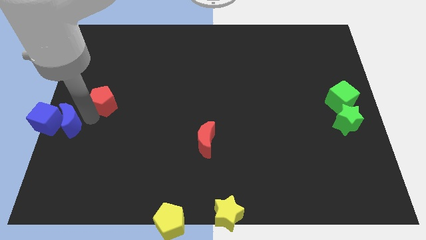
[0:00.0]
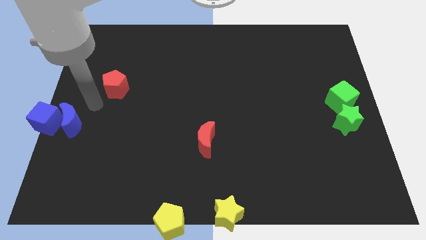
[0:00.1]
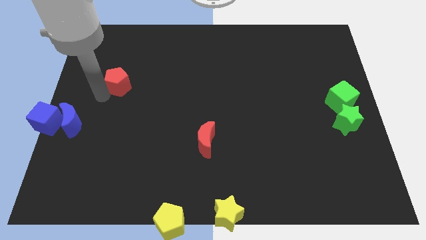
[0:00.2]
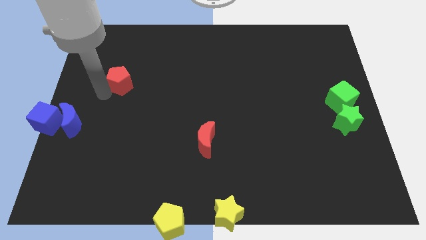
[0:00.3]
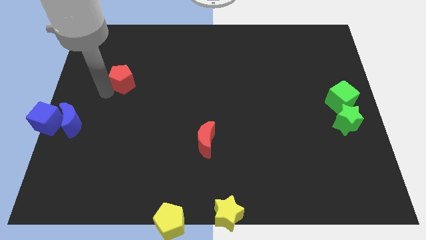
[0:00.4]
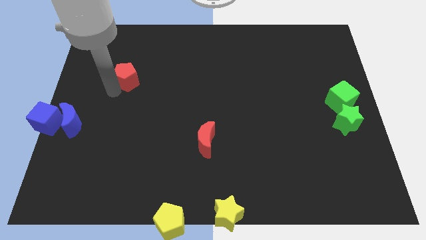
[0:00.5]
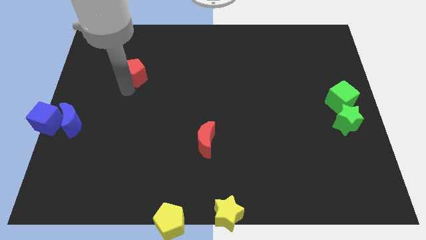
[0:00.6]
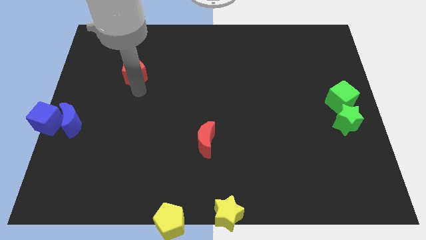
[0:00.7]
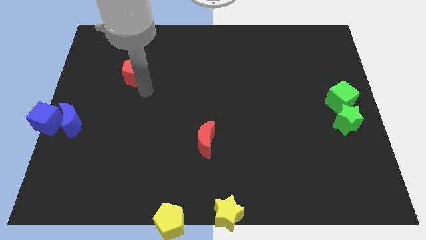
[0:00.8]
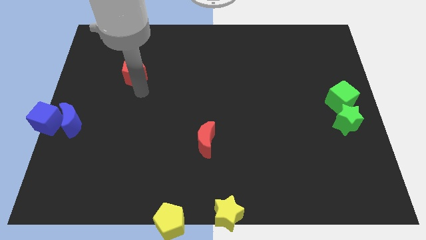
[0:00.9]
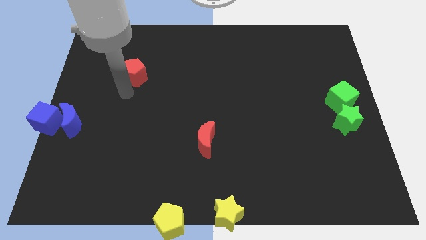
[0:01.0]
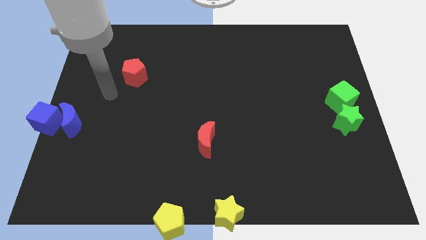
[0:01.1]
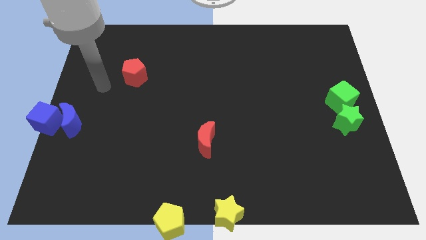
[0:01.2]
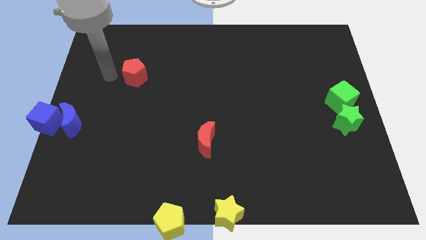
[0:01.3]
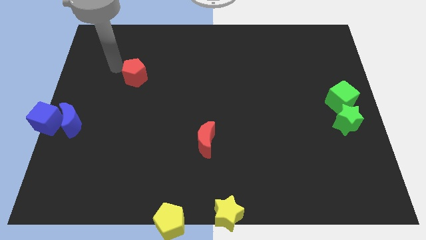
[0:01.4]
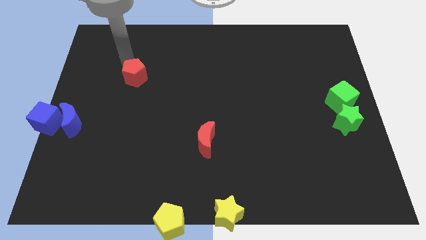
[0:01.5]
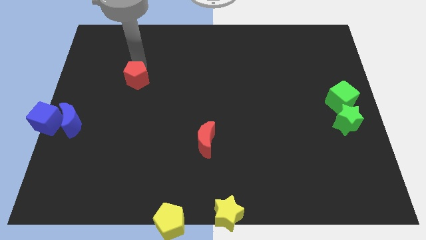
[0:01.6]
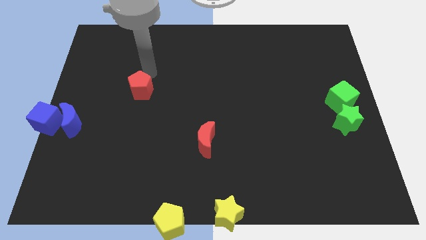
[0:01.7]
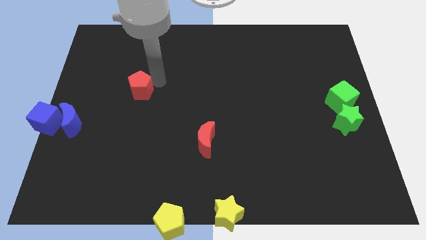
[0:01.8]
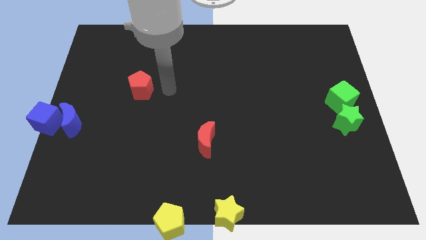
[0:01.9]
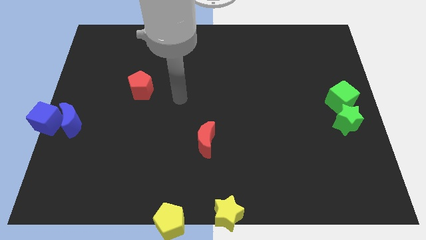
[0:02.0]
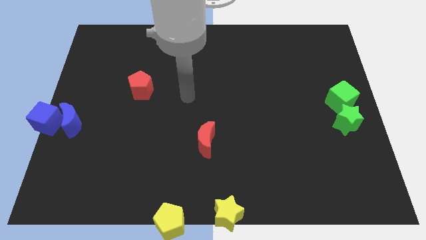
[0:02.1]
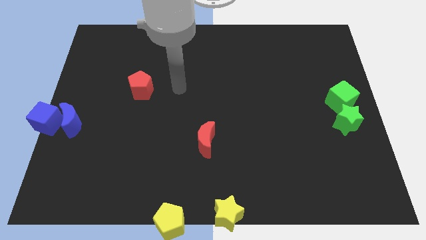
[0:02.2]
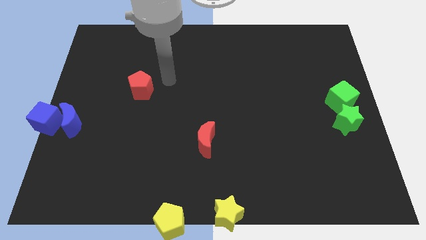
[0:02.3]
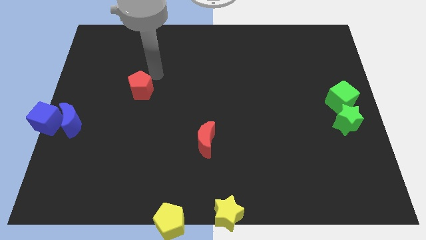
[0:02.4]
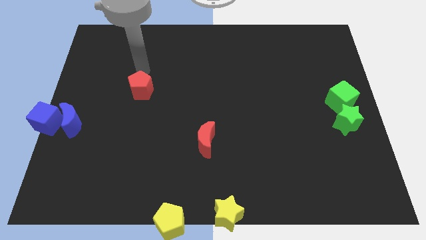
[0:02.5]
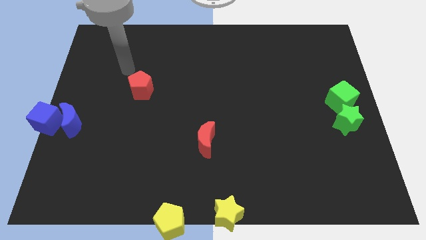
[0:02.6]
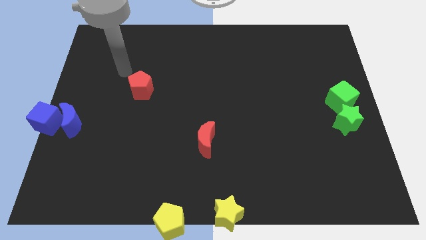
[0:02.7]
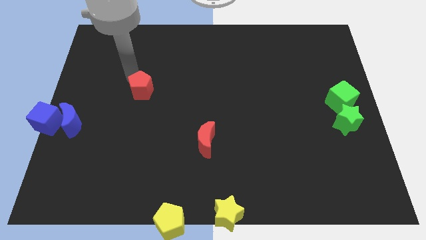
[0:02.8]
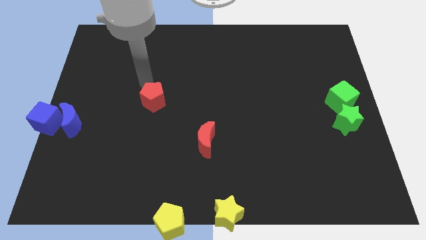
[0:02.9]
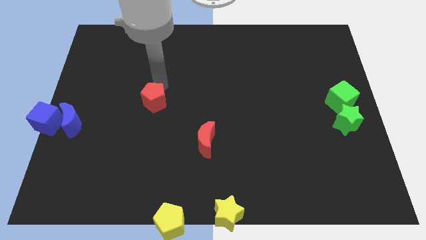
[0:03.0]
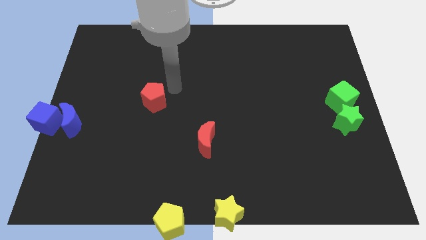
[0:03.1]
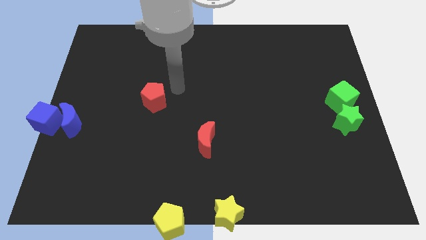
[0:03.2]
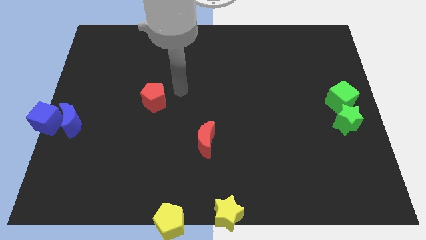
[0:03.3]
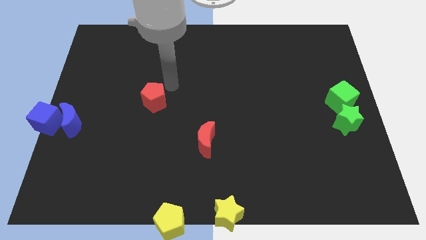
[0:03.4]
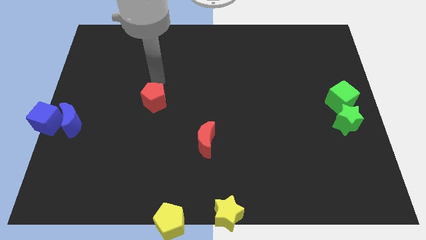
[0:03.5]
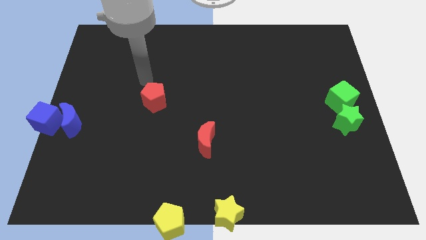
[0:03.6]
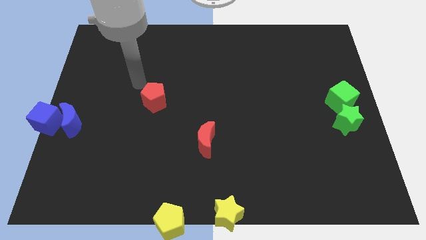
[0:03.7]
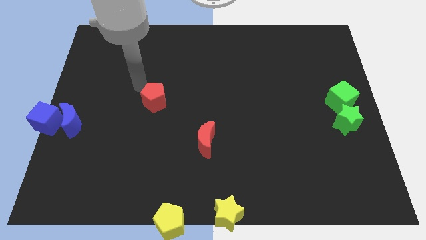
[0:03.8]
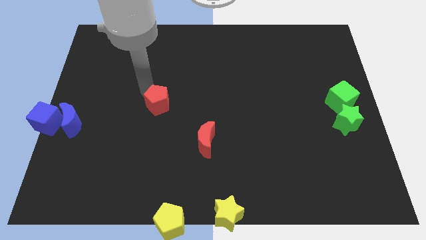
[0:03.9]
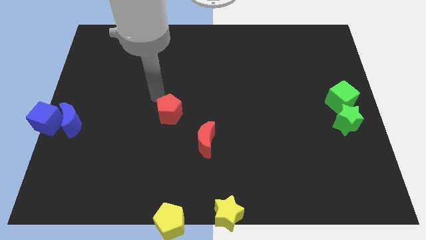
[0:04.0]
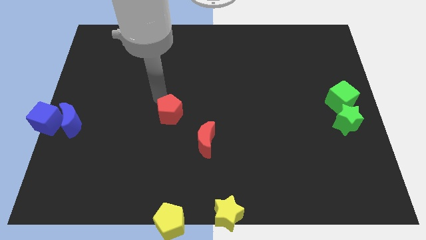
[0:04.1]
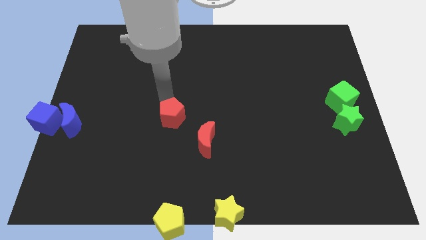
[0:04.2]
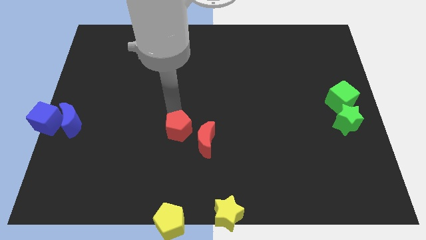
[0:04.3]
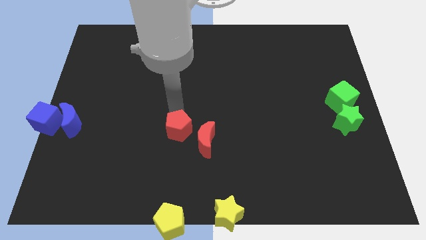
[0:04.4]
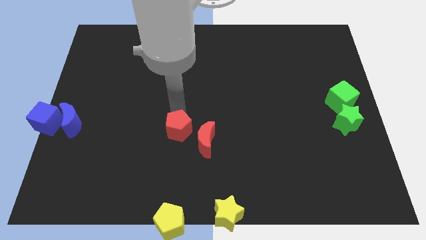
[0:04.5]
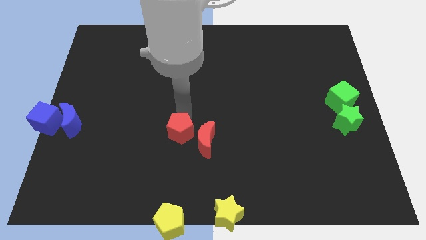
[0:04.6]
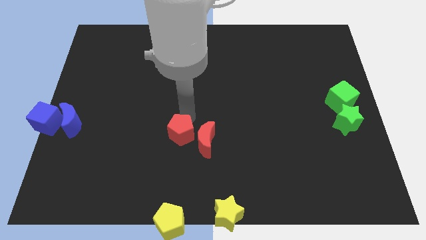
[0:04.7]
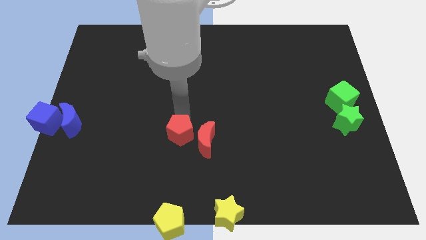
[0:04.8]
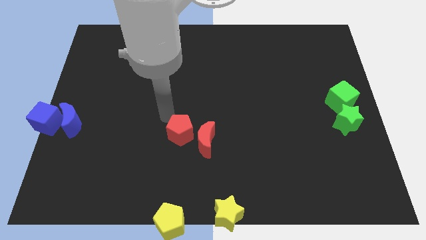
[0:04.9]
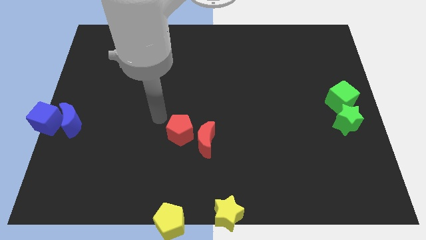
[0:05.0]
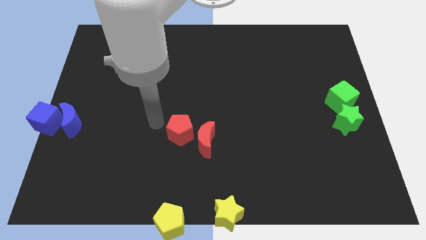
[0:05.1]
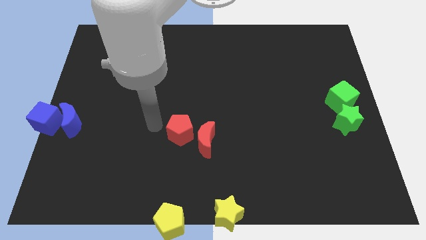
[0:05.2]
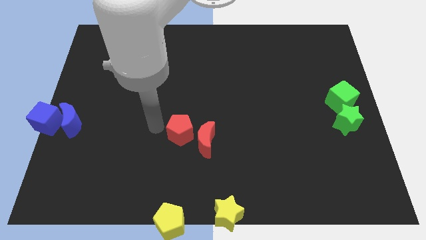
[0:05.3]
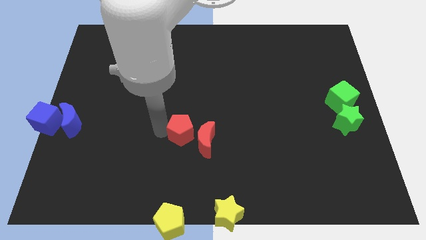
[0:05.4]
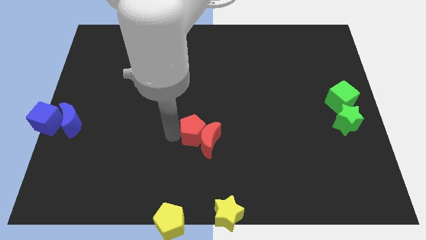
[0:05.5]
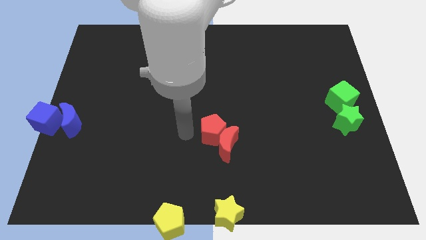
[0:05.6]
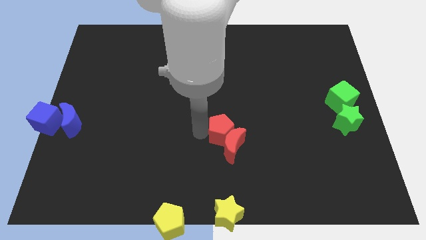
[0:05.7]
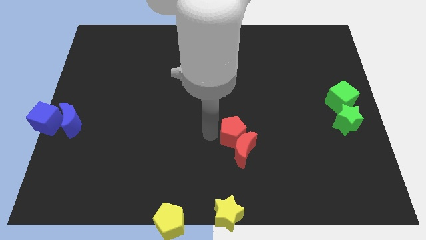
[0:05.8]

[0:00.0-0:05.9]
push the red pentagon into the red moon

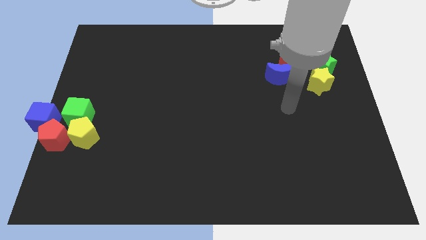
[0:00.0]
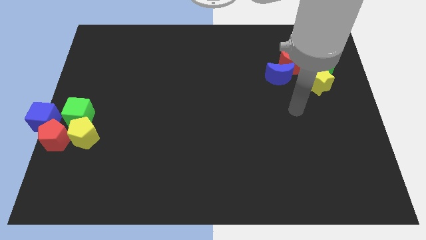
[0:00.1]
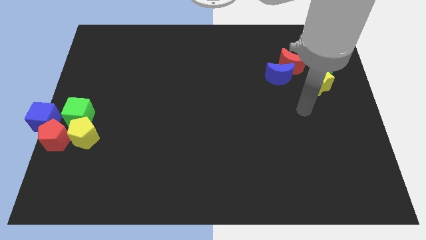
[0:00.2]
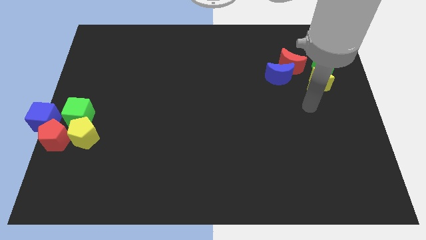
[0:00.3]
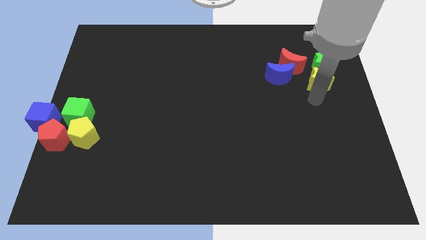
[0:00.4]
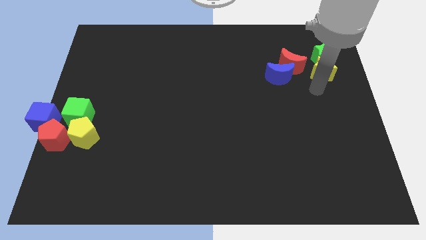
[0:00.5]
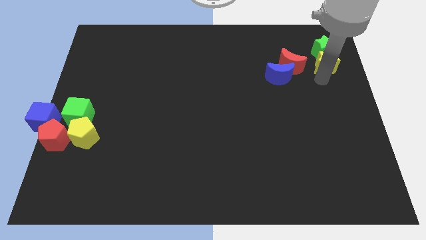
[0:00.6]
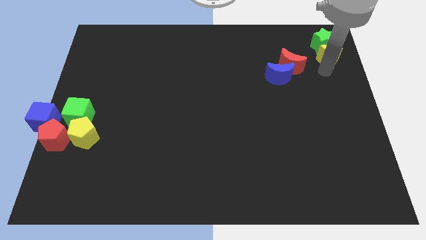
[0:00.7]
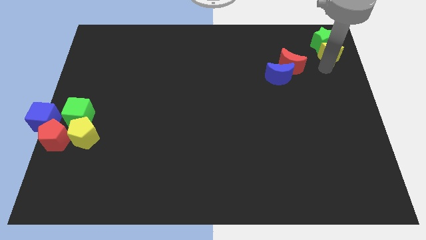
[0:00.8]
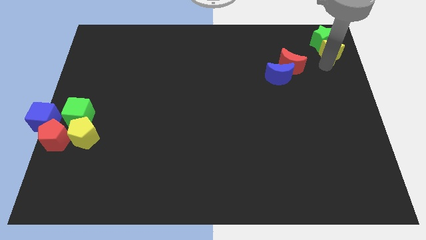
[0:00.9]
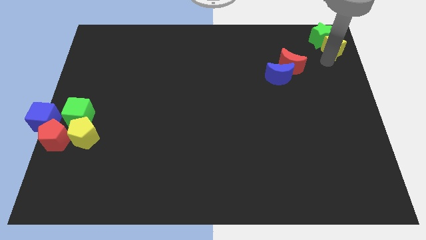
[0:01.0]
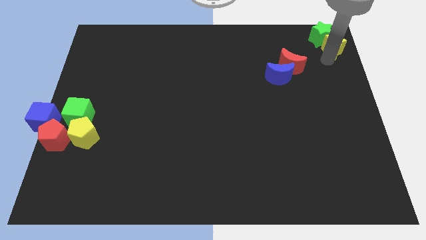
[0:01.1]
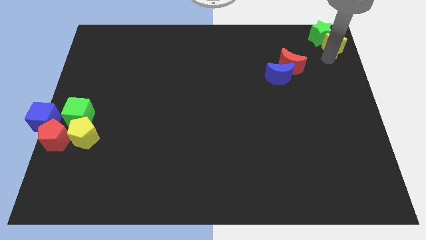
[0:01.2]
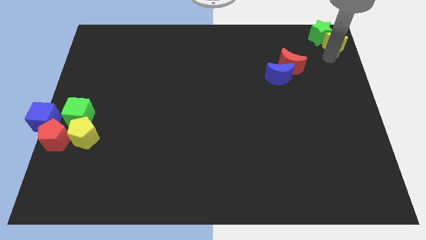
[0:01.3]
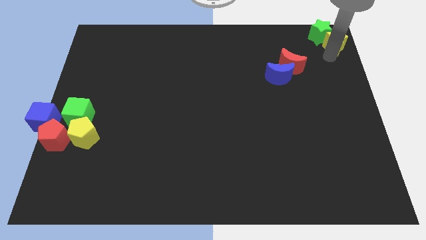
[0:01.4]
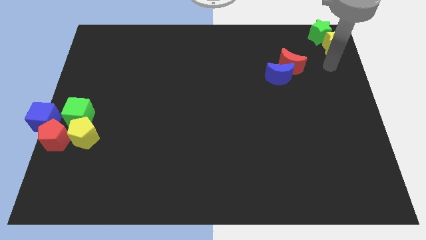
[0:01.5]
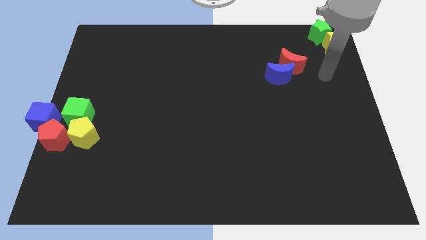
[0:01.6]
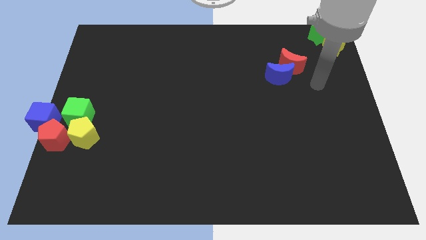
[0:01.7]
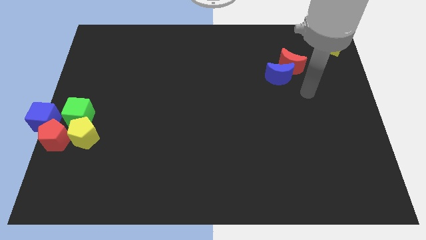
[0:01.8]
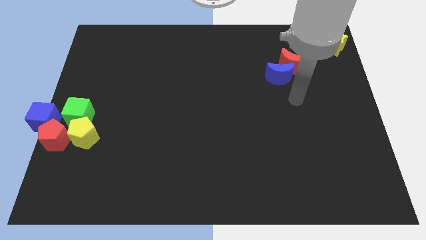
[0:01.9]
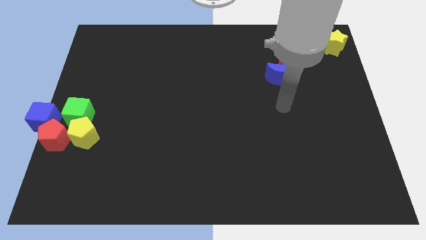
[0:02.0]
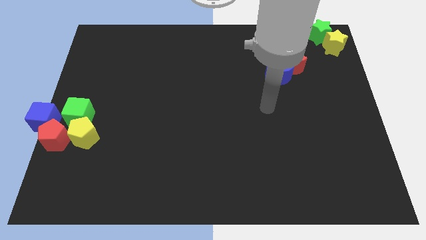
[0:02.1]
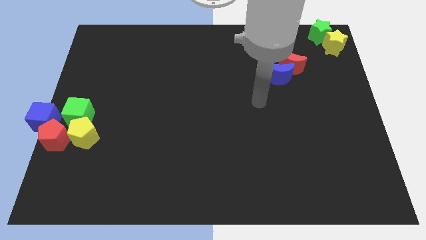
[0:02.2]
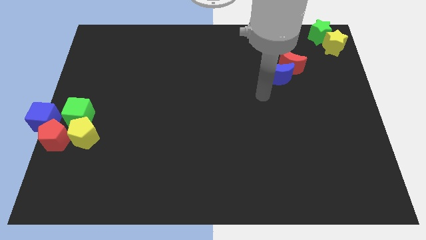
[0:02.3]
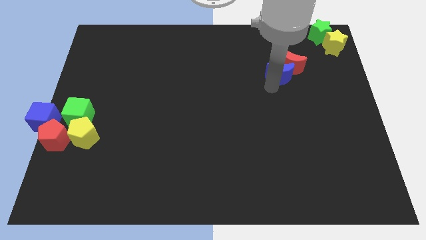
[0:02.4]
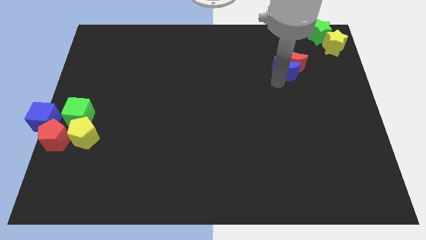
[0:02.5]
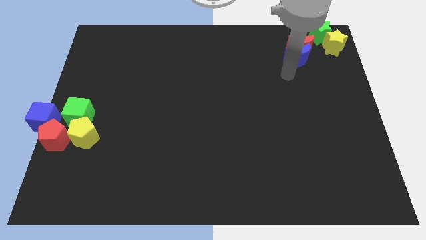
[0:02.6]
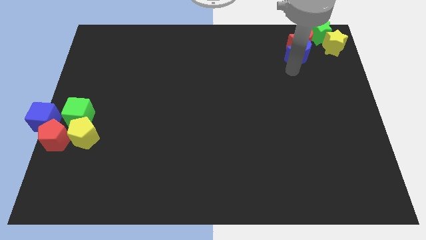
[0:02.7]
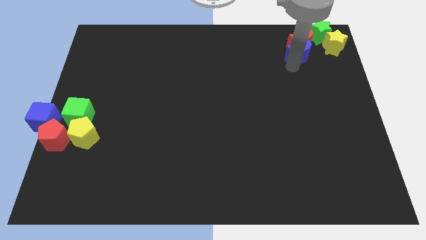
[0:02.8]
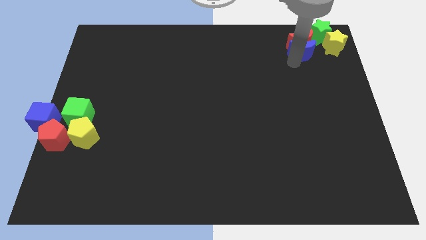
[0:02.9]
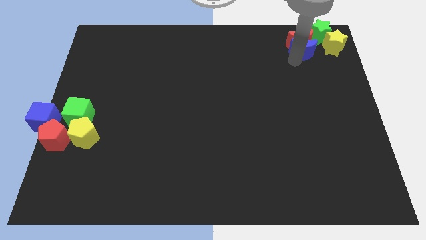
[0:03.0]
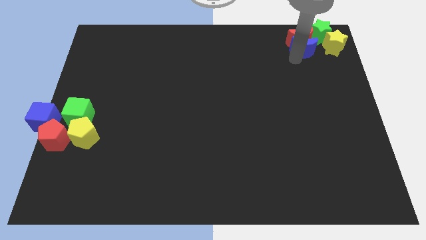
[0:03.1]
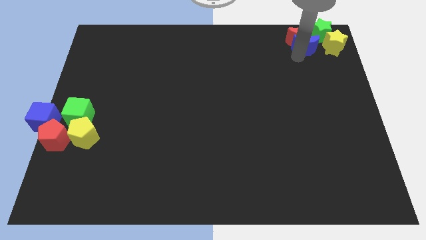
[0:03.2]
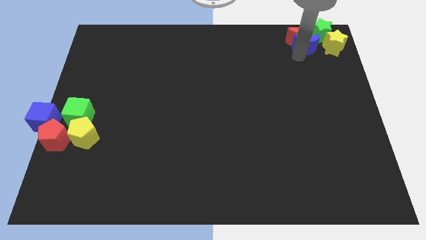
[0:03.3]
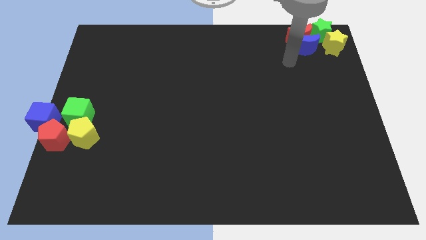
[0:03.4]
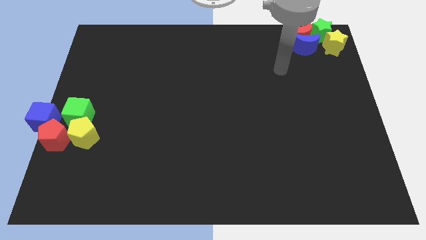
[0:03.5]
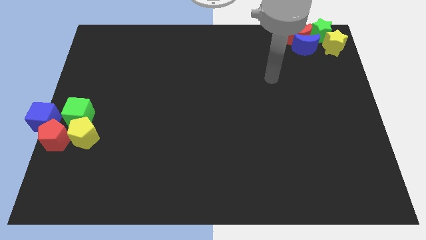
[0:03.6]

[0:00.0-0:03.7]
place the stars and moons to the top right corner
